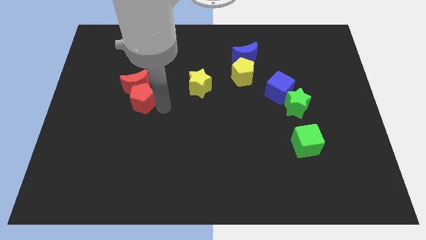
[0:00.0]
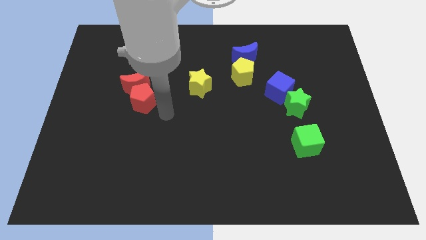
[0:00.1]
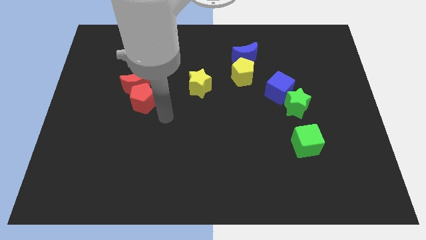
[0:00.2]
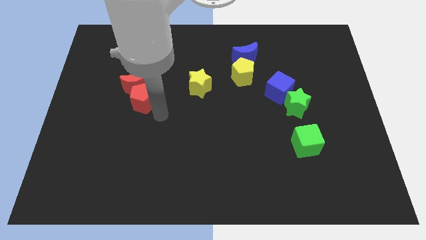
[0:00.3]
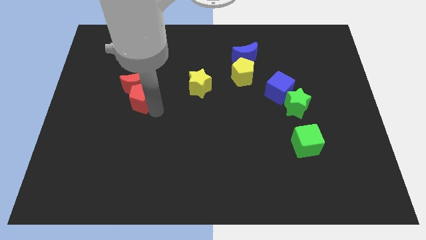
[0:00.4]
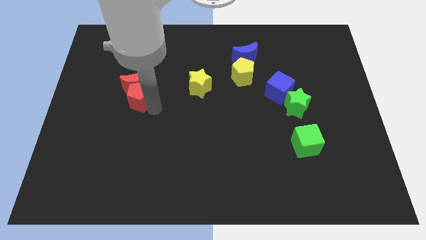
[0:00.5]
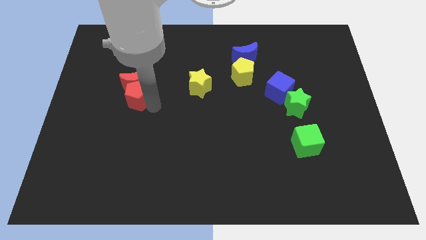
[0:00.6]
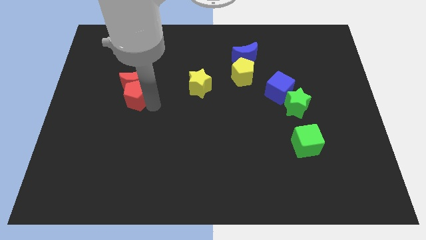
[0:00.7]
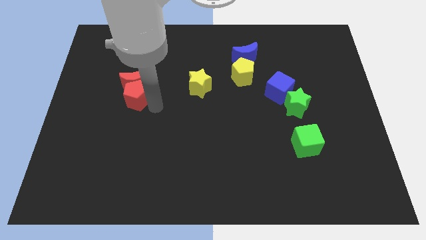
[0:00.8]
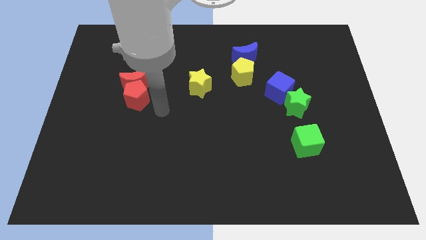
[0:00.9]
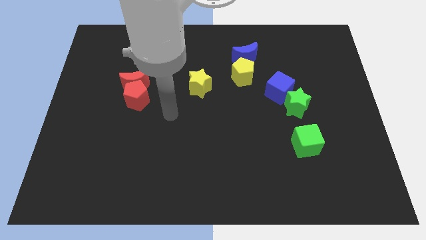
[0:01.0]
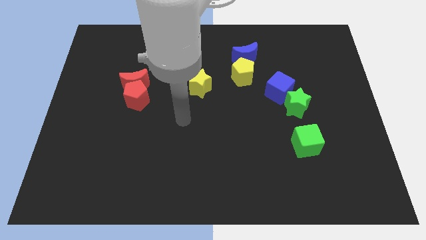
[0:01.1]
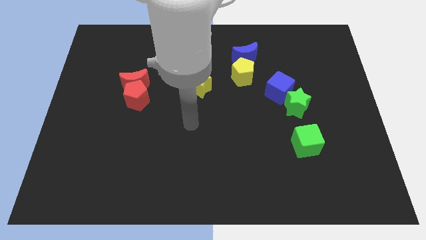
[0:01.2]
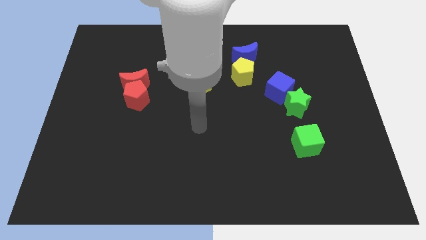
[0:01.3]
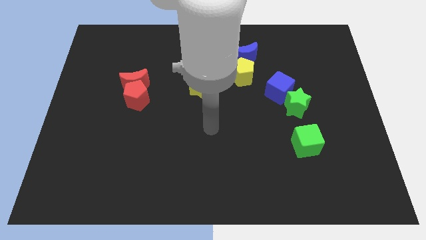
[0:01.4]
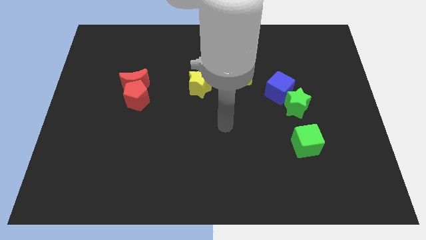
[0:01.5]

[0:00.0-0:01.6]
place your arm at the center

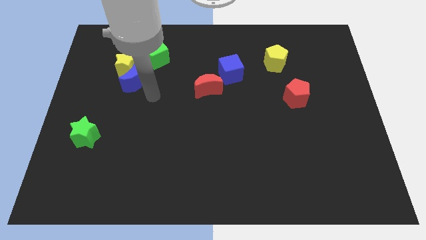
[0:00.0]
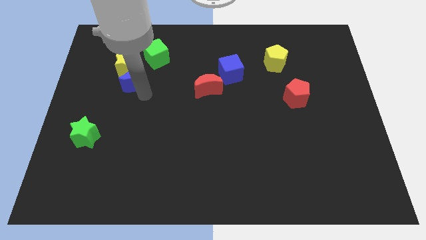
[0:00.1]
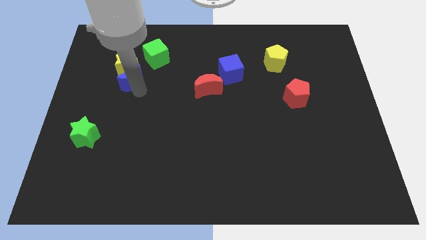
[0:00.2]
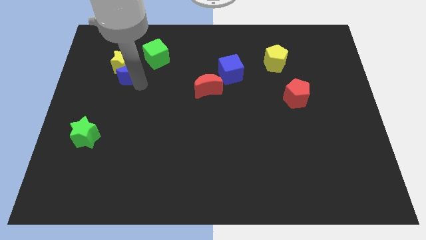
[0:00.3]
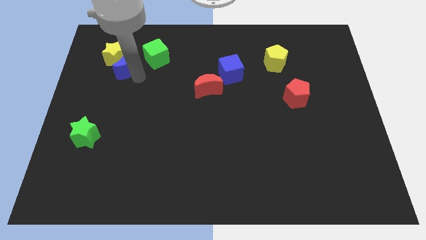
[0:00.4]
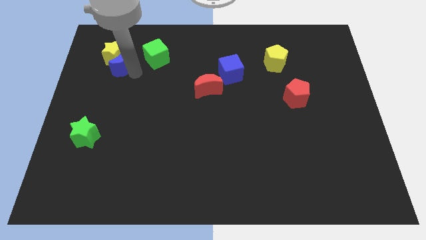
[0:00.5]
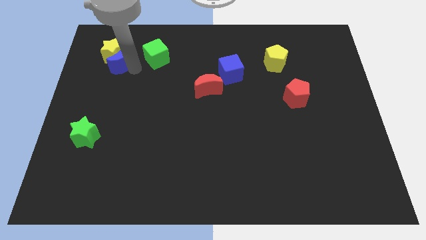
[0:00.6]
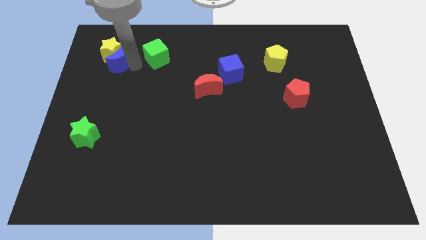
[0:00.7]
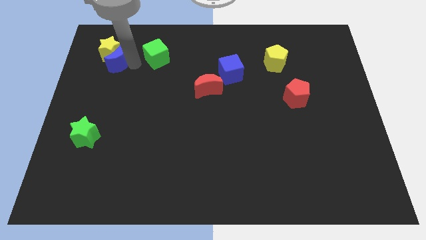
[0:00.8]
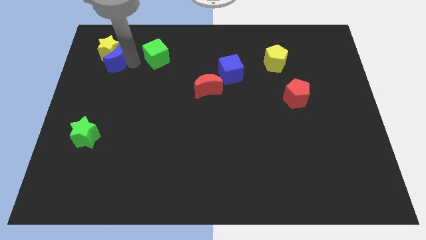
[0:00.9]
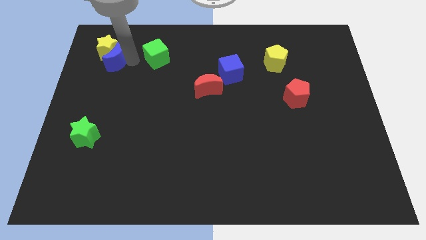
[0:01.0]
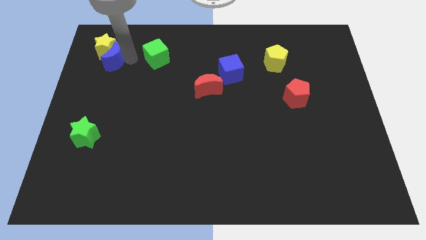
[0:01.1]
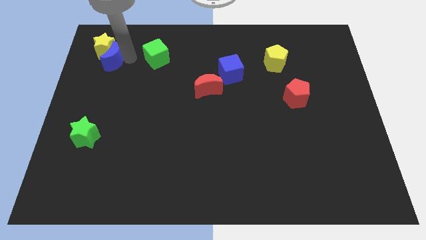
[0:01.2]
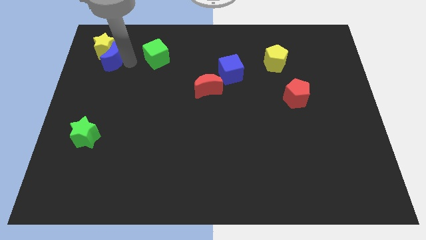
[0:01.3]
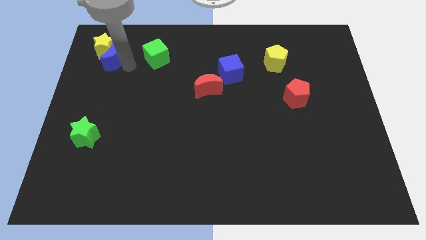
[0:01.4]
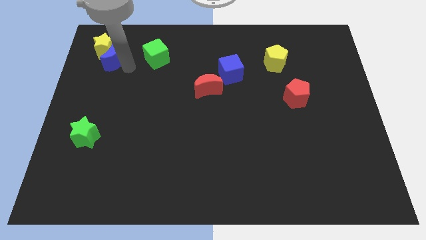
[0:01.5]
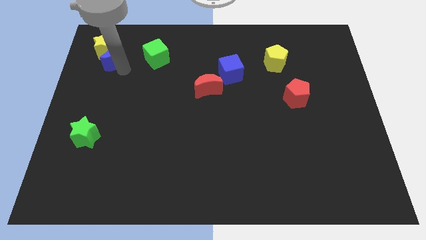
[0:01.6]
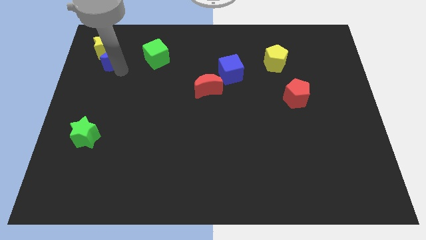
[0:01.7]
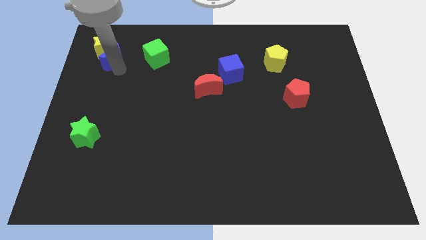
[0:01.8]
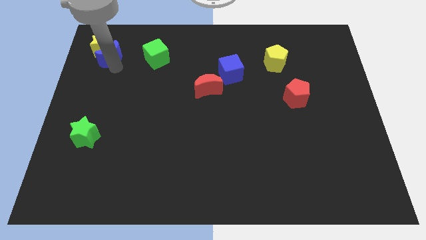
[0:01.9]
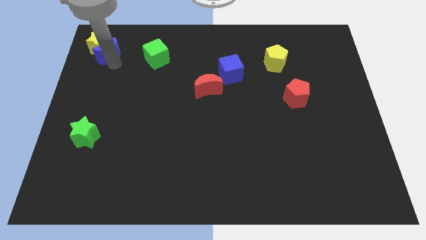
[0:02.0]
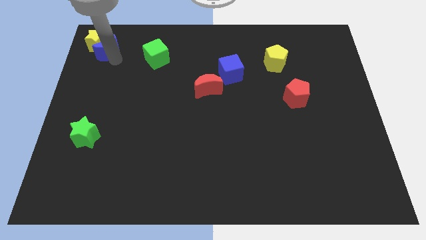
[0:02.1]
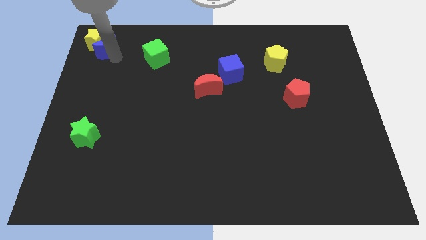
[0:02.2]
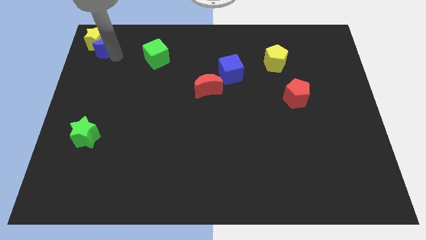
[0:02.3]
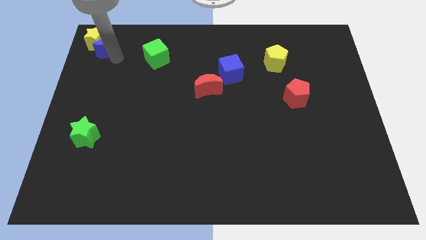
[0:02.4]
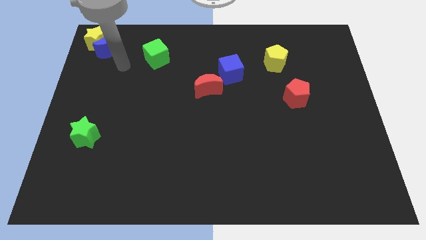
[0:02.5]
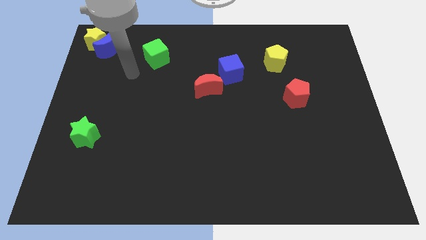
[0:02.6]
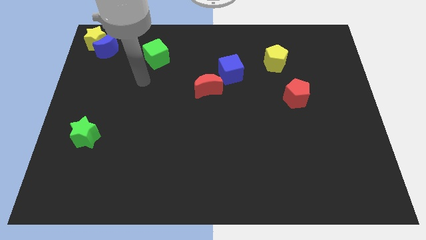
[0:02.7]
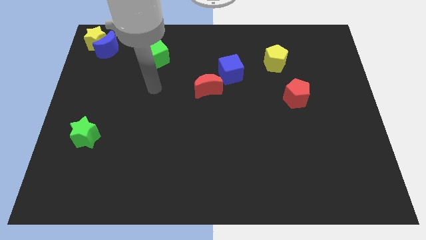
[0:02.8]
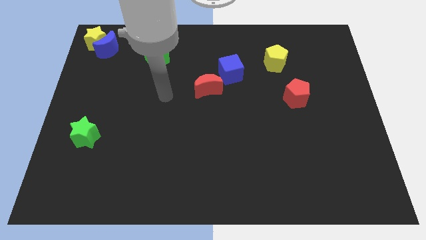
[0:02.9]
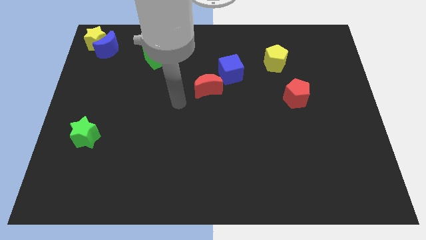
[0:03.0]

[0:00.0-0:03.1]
push the yellow star to the top left corner with the blue moon

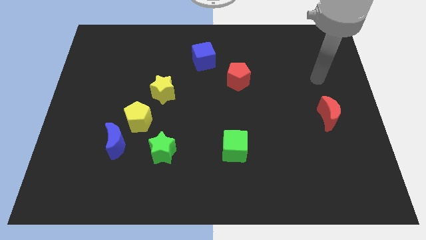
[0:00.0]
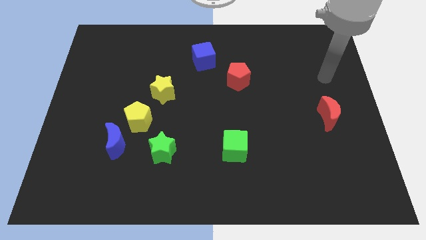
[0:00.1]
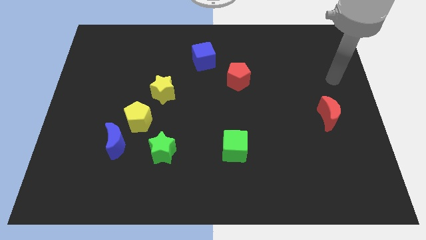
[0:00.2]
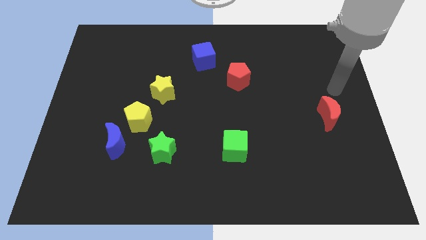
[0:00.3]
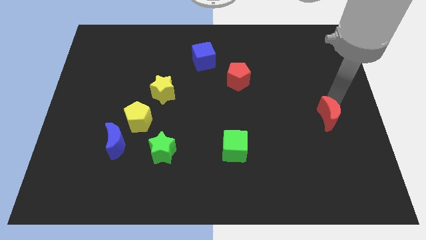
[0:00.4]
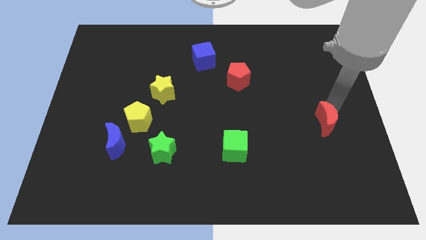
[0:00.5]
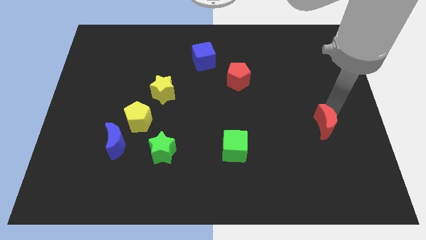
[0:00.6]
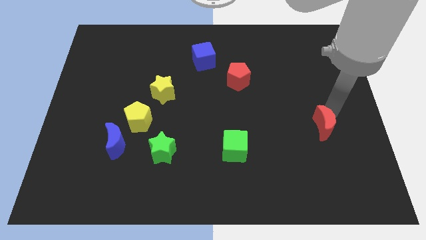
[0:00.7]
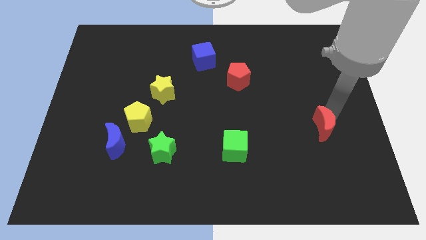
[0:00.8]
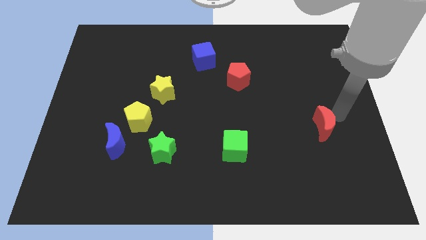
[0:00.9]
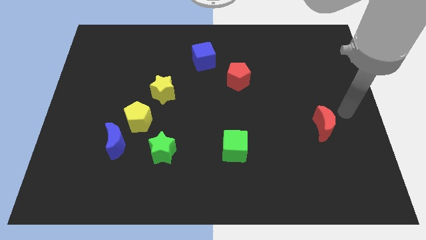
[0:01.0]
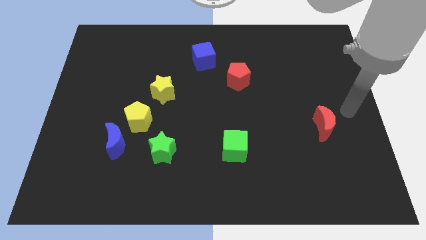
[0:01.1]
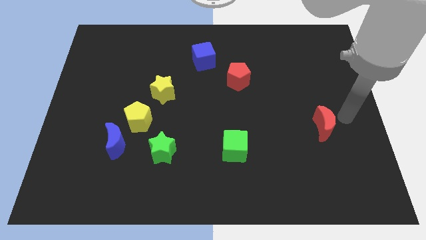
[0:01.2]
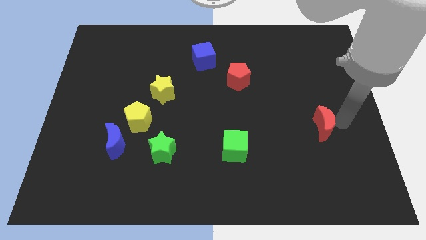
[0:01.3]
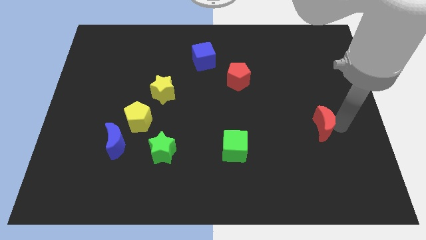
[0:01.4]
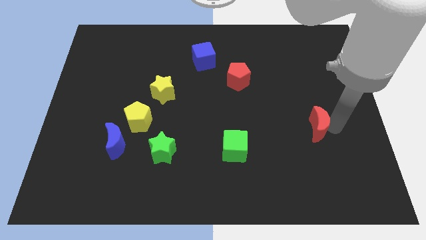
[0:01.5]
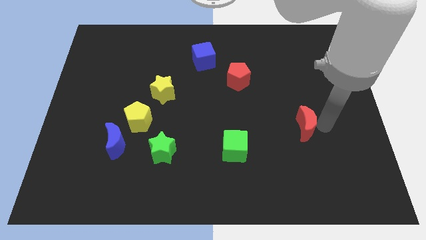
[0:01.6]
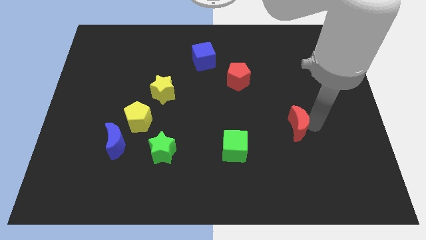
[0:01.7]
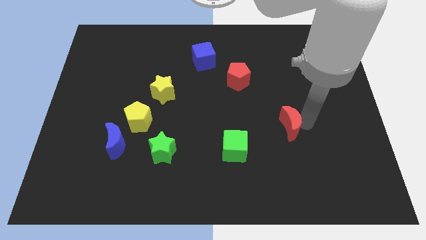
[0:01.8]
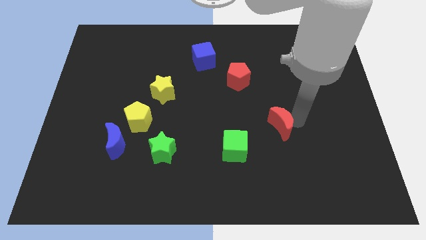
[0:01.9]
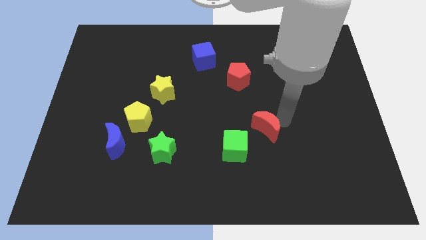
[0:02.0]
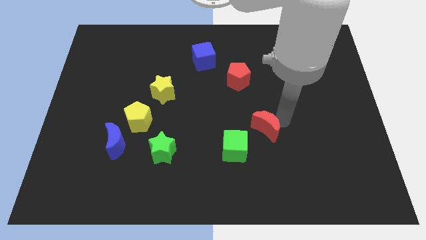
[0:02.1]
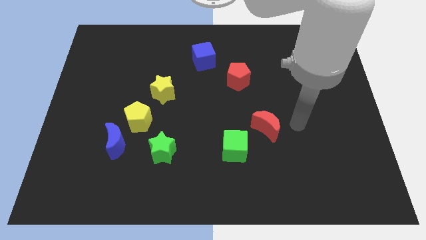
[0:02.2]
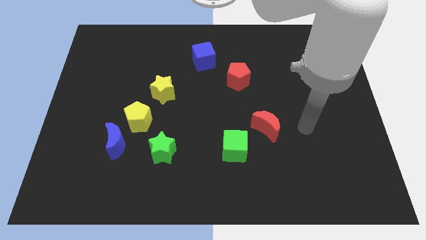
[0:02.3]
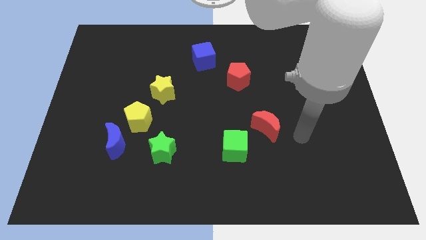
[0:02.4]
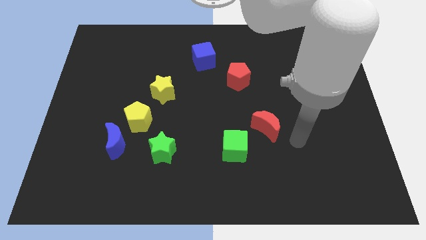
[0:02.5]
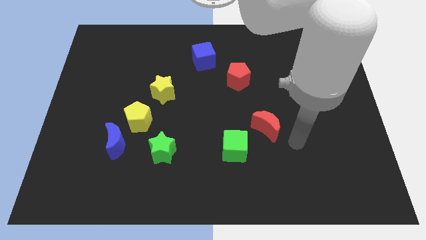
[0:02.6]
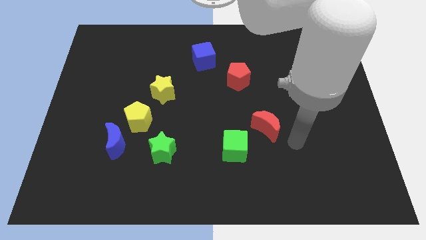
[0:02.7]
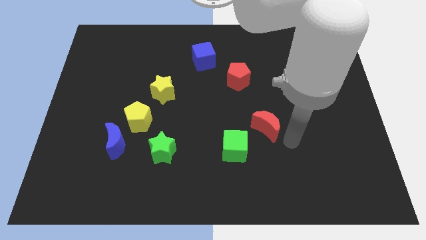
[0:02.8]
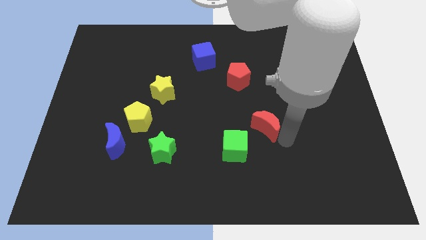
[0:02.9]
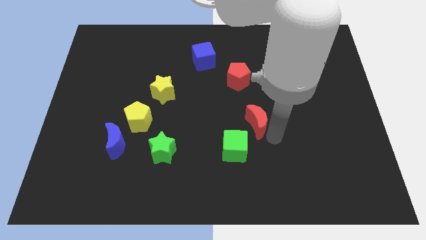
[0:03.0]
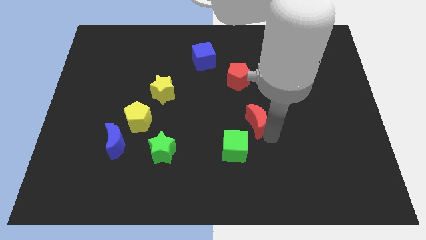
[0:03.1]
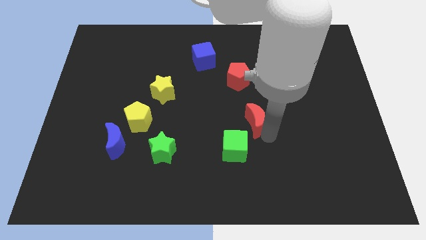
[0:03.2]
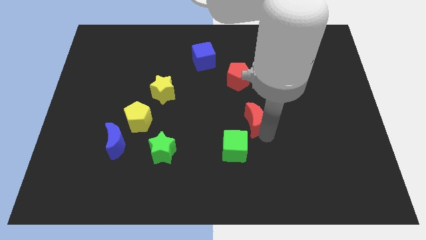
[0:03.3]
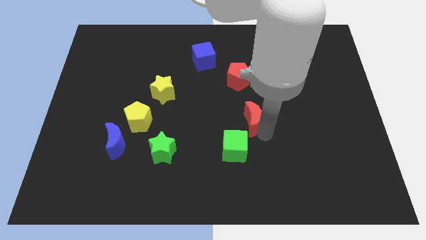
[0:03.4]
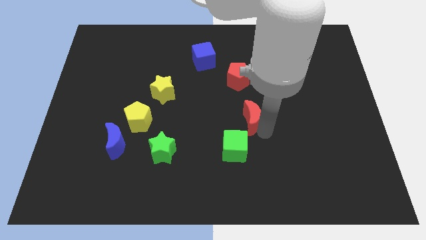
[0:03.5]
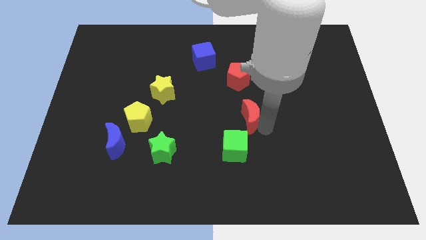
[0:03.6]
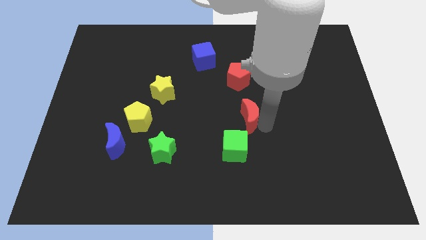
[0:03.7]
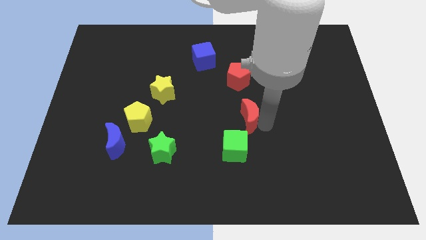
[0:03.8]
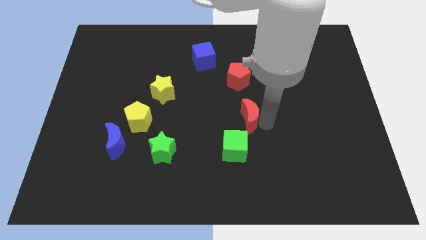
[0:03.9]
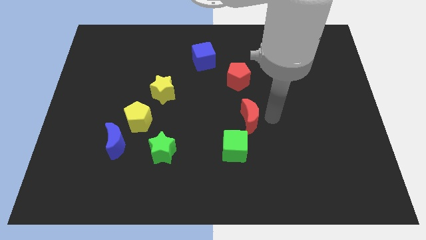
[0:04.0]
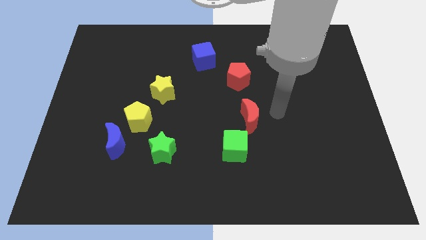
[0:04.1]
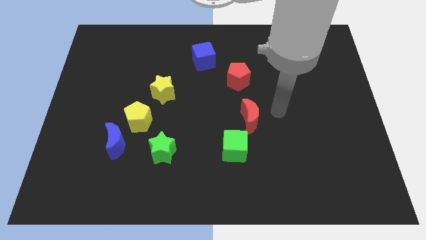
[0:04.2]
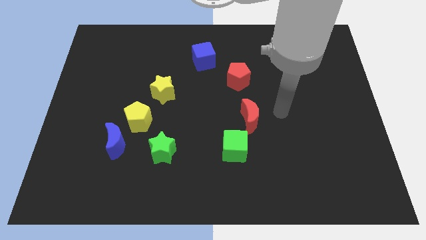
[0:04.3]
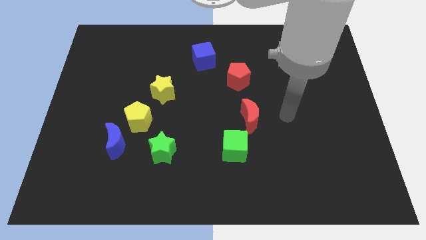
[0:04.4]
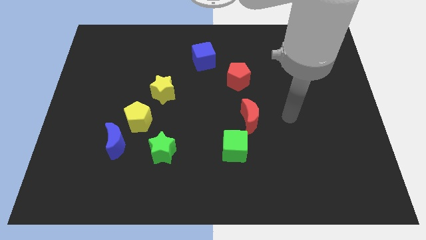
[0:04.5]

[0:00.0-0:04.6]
place the red crescent to the bottom right of red pentagon
